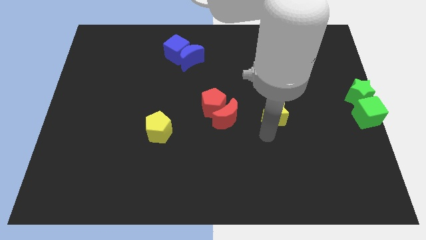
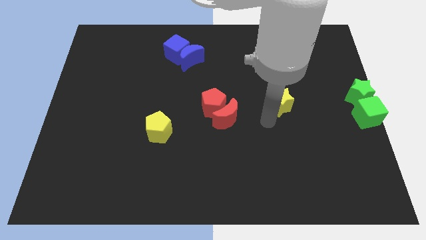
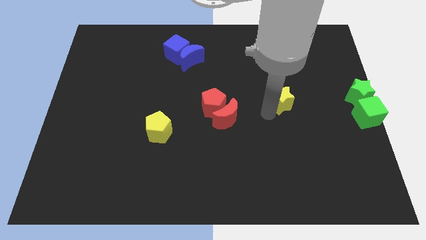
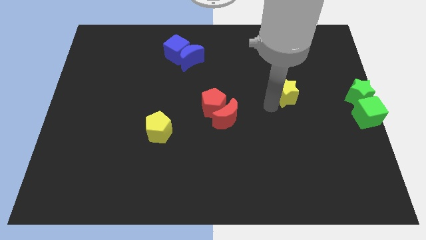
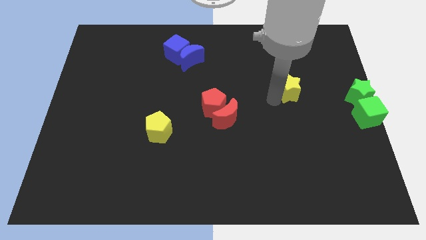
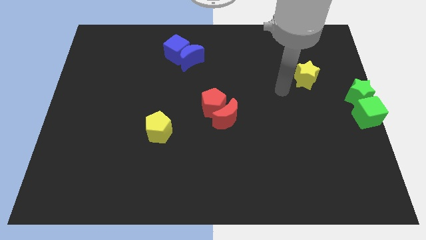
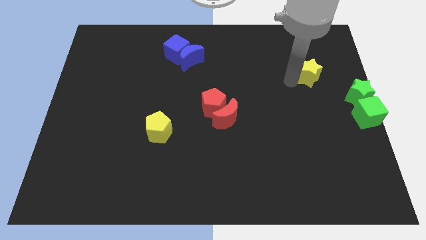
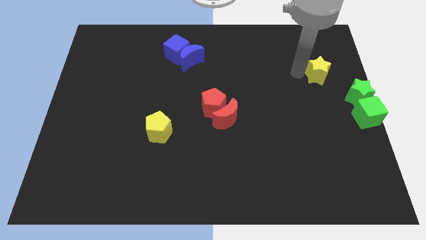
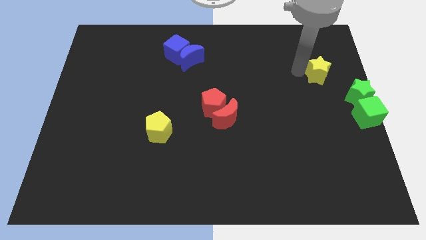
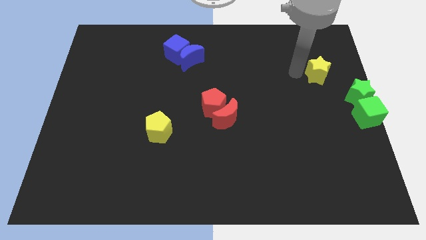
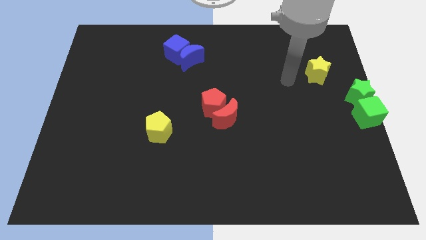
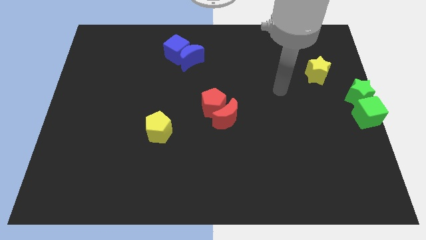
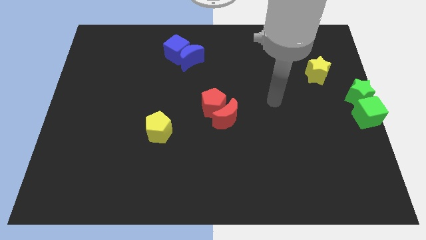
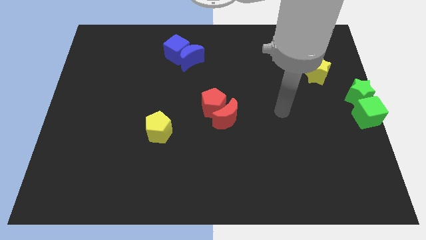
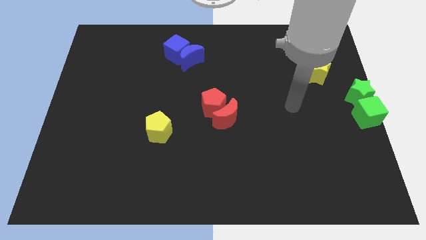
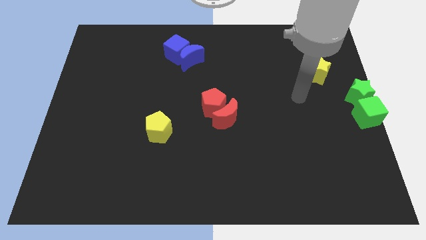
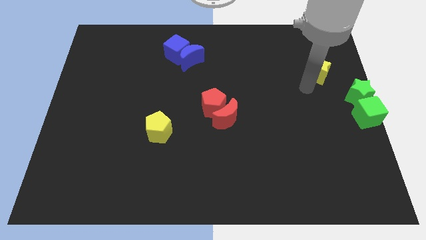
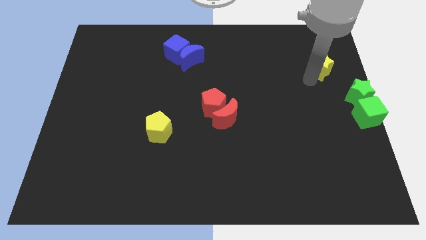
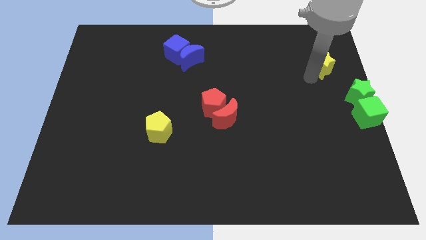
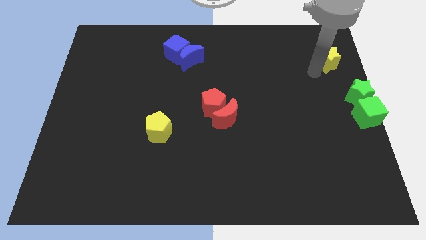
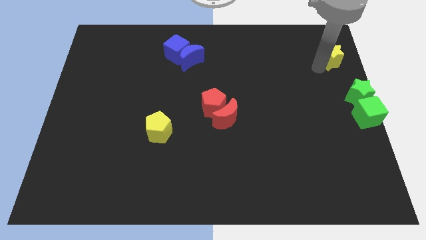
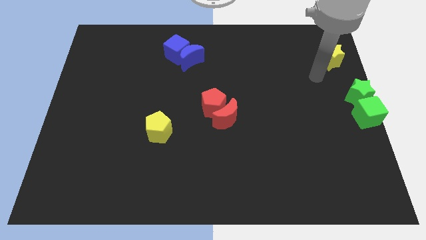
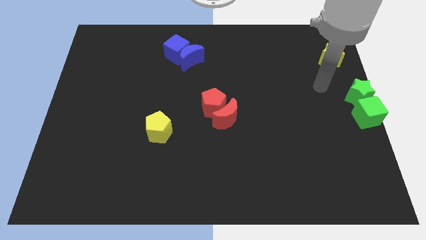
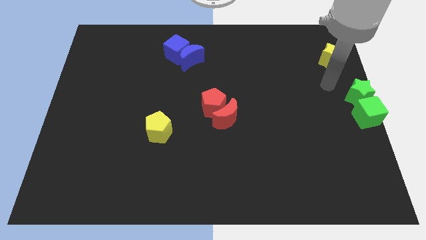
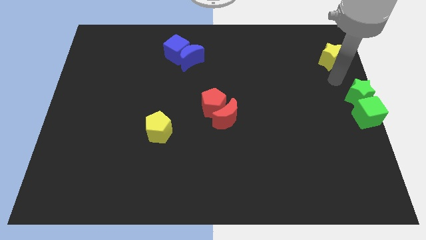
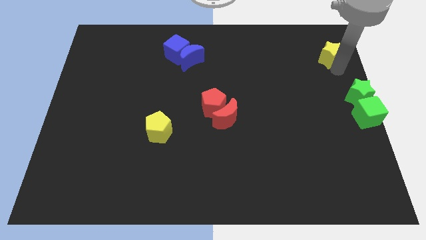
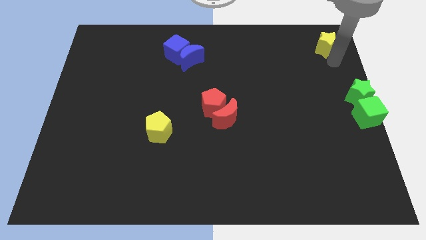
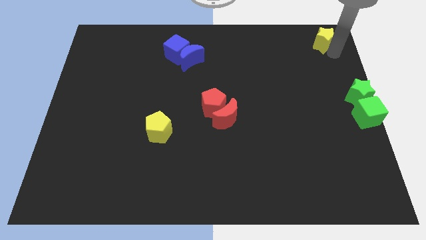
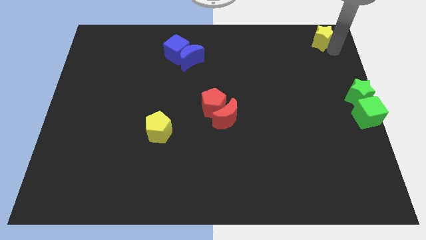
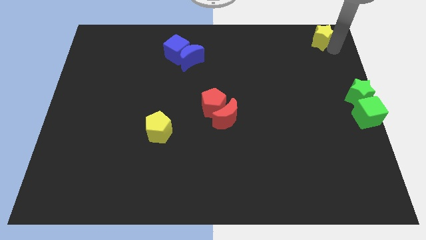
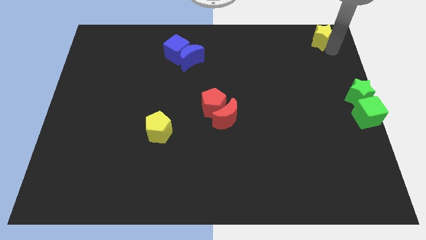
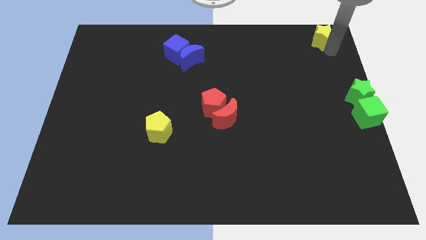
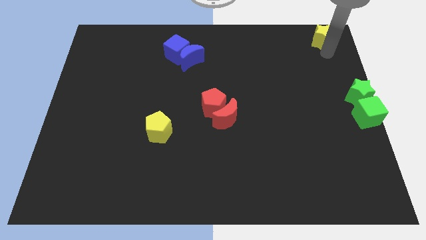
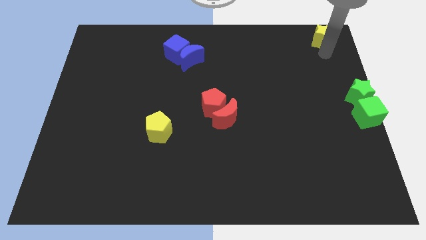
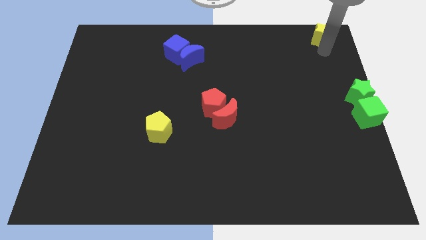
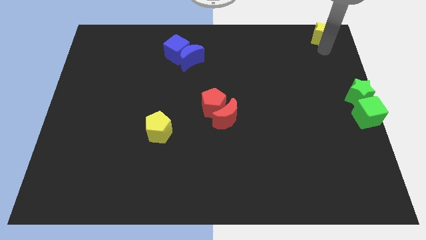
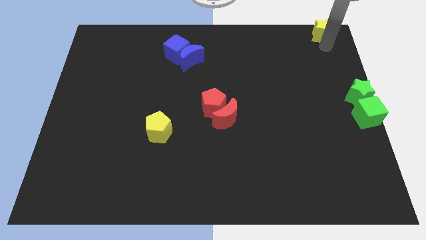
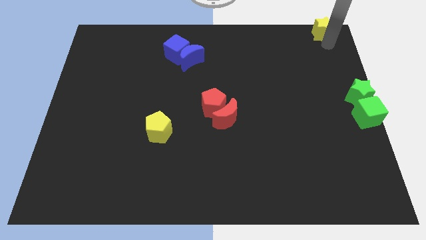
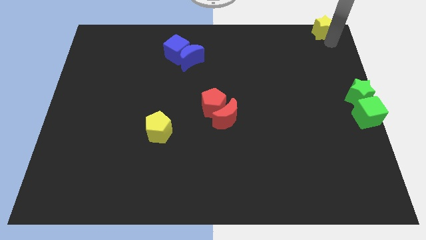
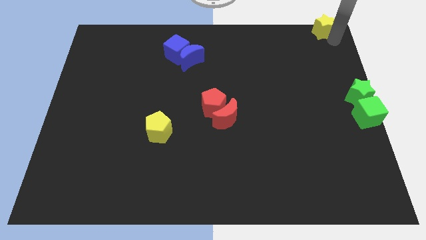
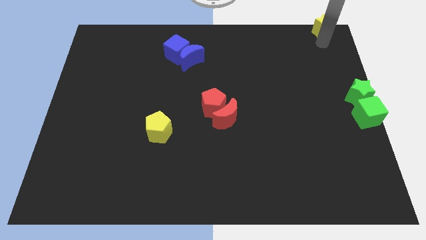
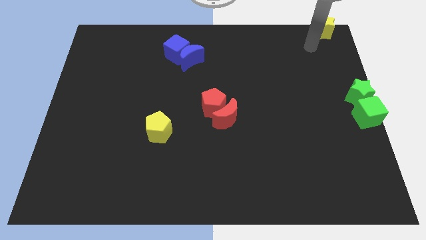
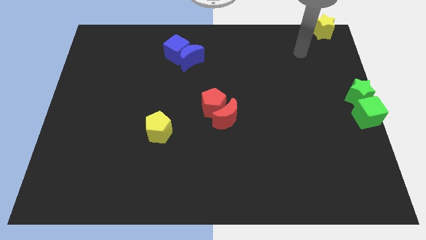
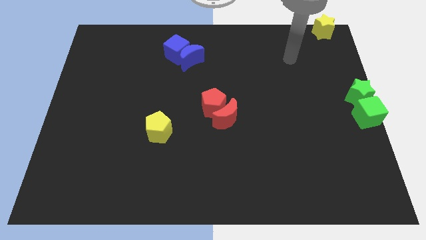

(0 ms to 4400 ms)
move the yellow star to the top right corner of the board

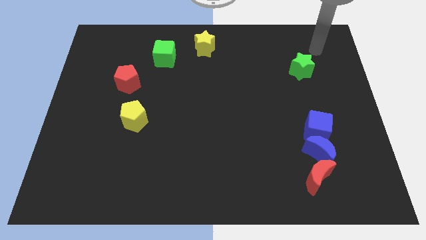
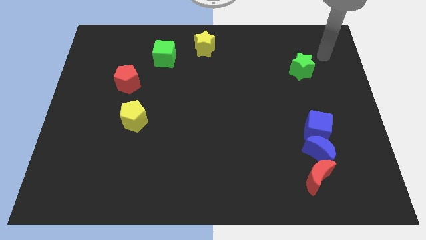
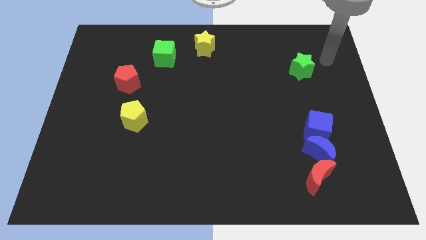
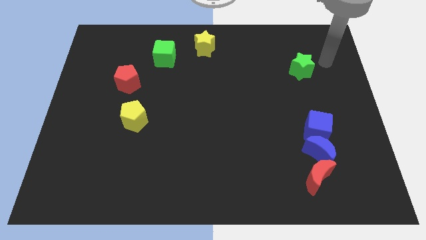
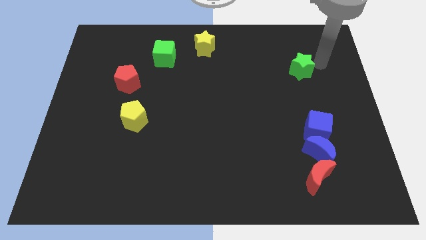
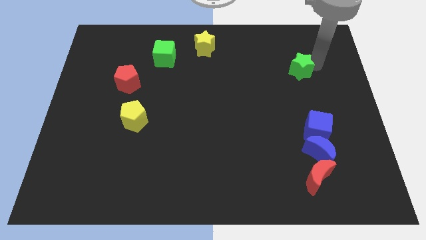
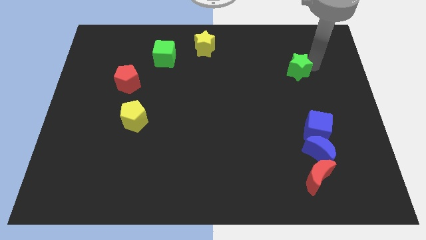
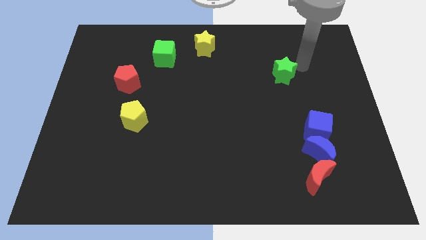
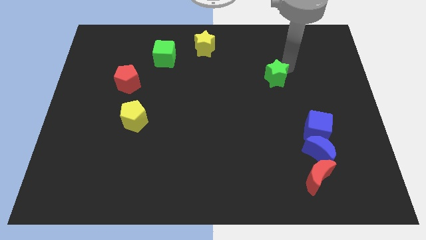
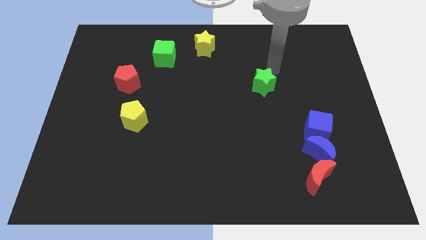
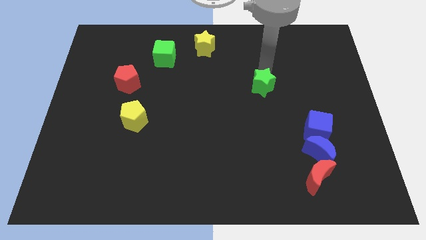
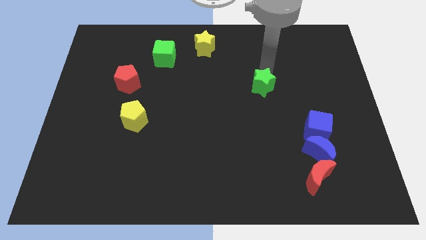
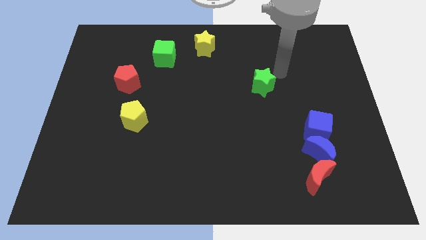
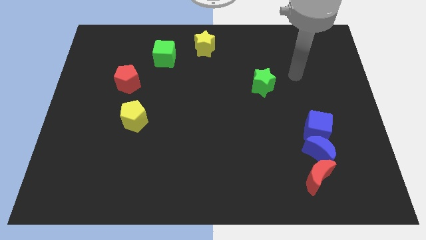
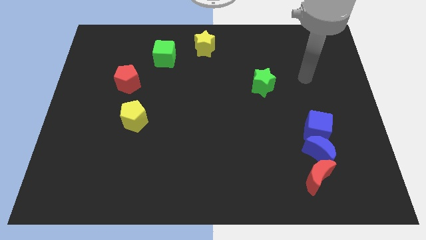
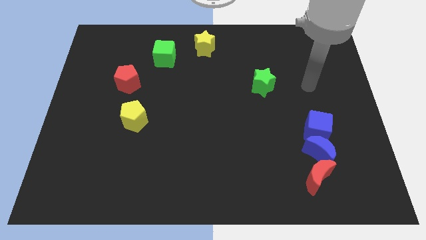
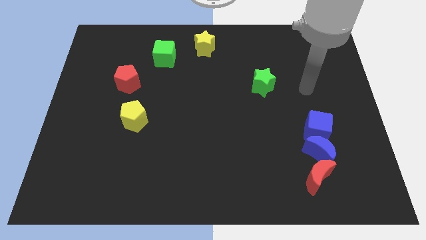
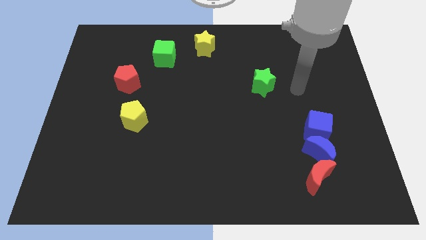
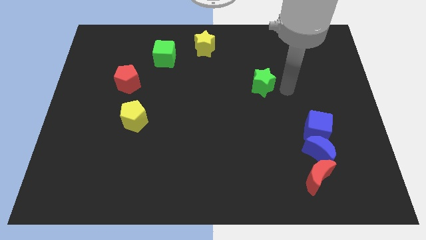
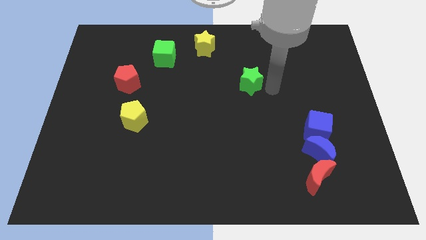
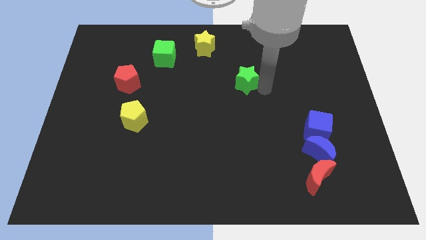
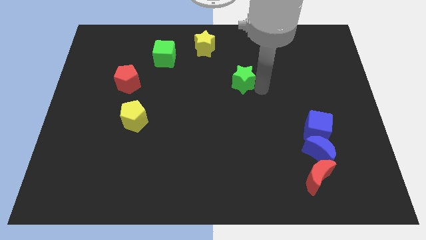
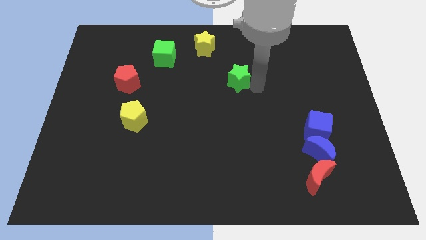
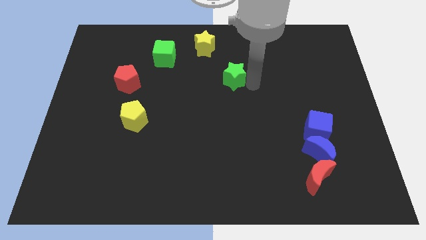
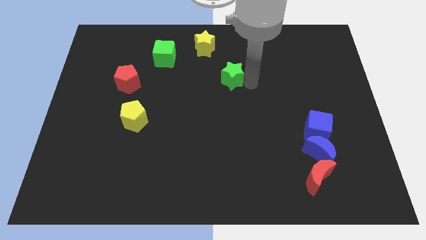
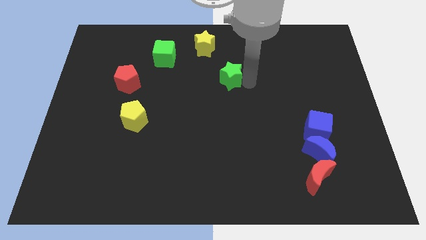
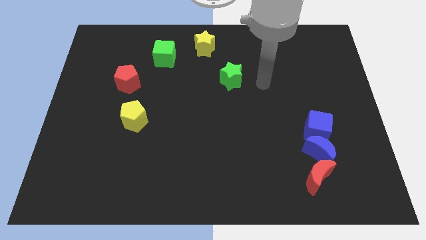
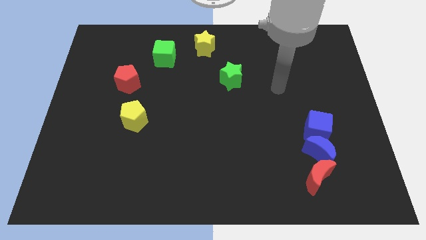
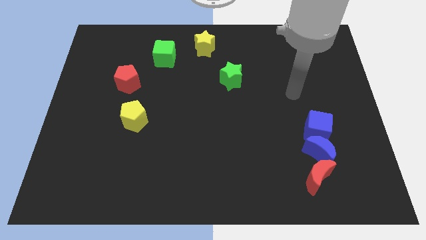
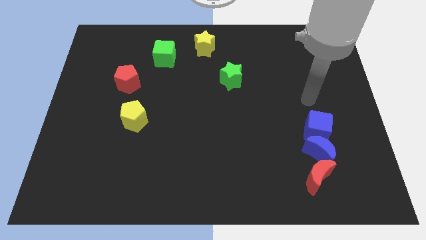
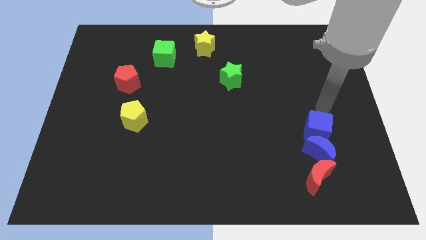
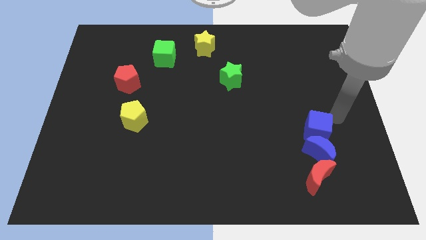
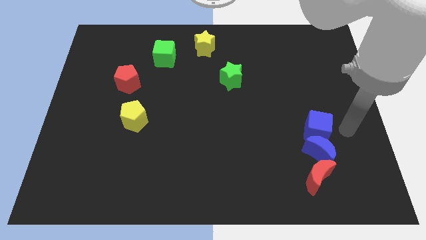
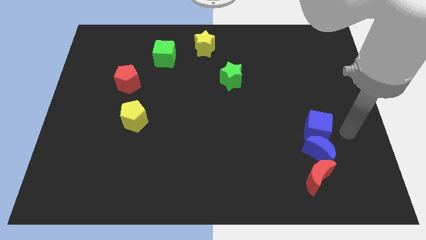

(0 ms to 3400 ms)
push the green star to the left

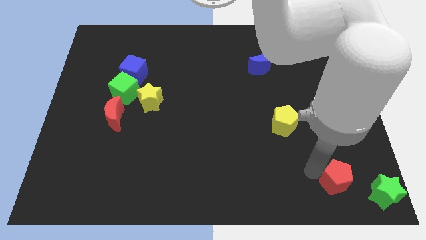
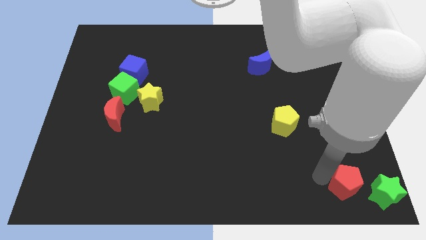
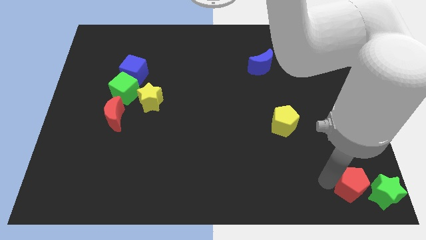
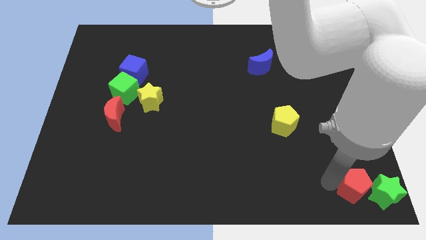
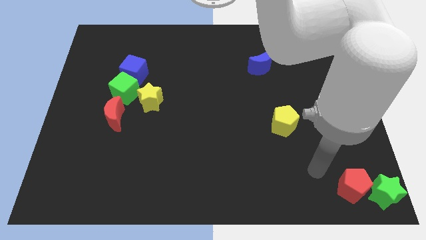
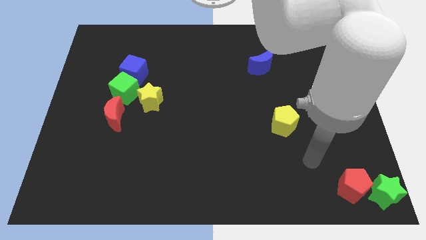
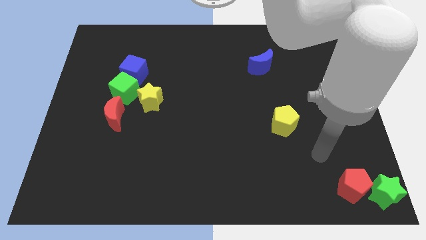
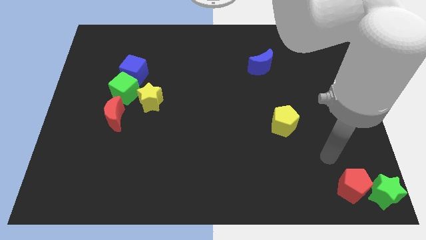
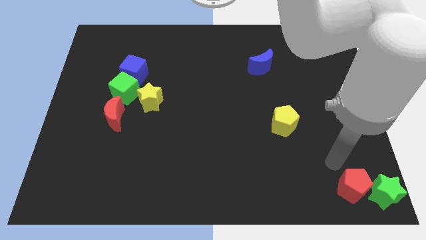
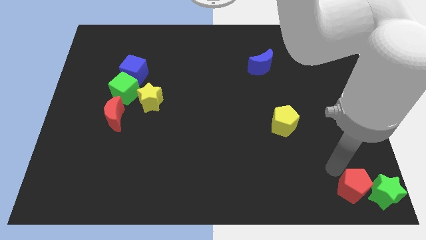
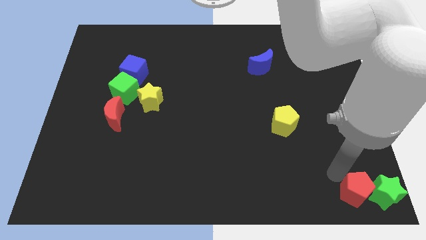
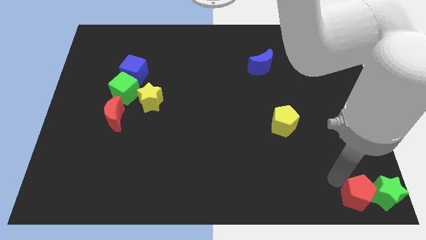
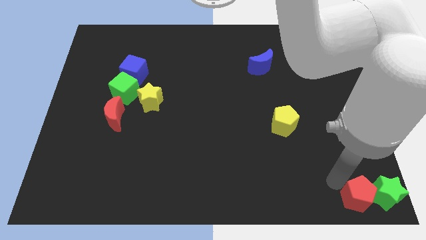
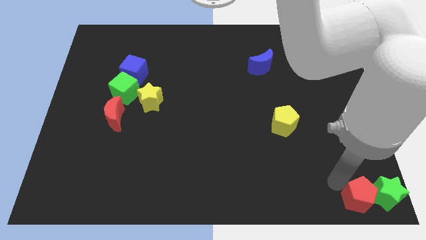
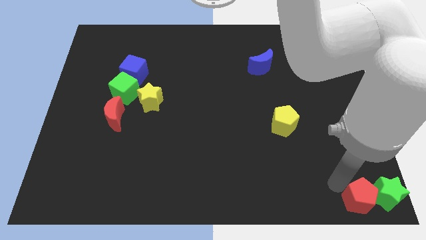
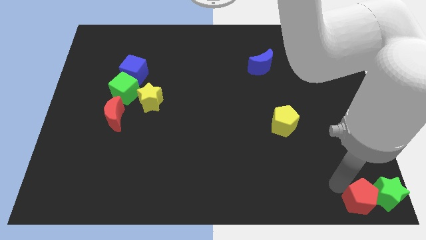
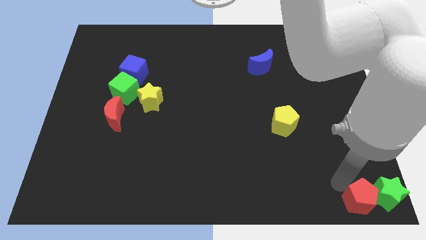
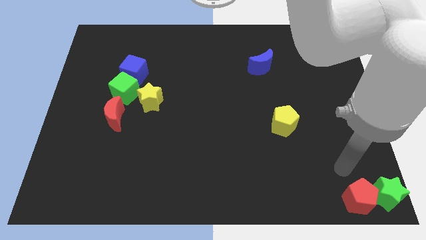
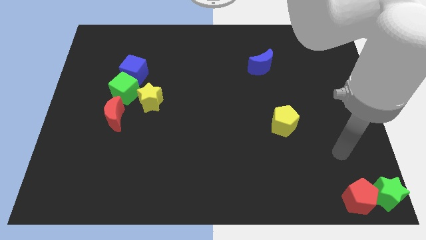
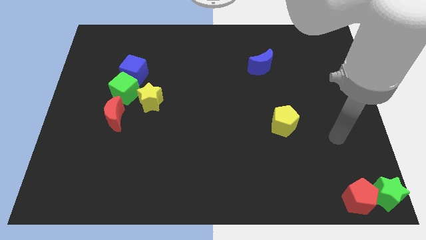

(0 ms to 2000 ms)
move the red pentagon left to the green star
